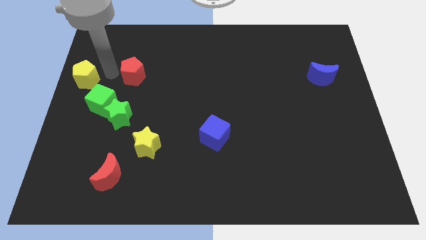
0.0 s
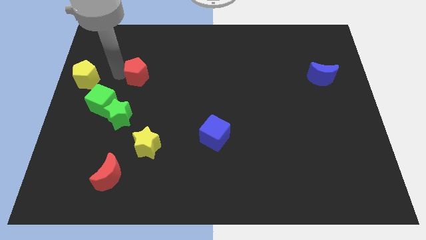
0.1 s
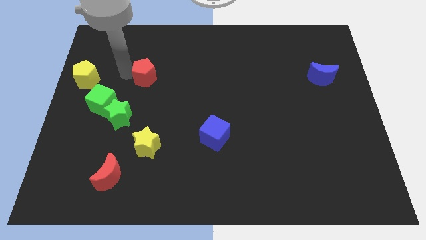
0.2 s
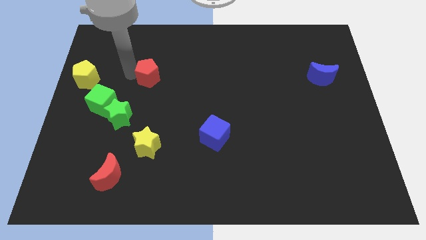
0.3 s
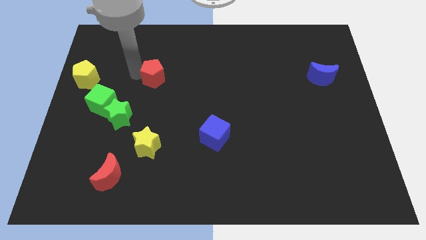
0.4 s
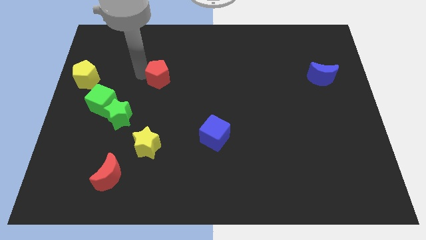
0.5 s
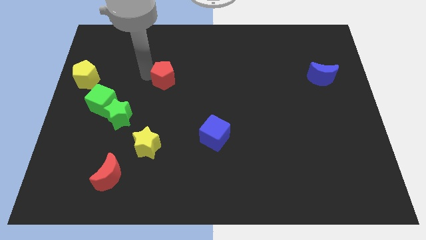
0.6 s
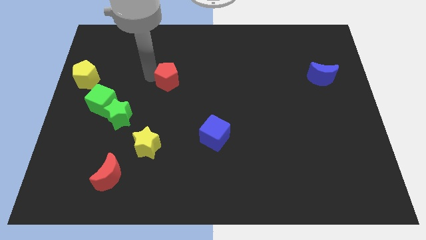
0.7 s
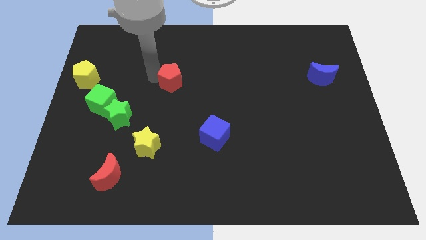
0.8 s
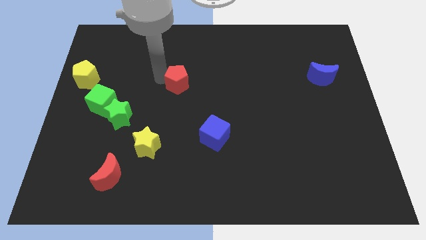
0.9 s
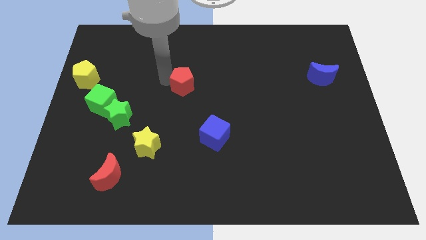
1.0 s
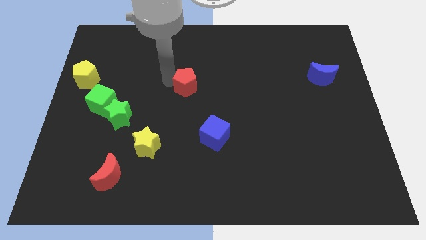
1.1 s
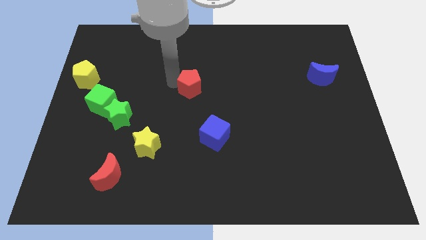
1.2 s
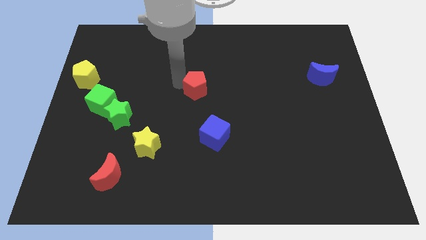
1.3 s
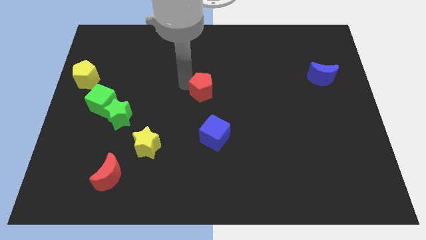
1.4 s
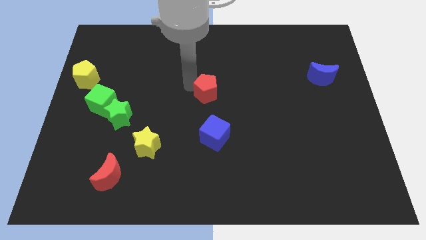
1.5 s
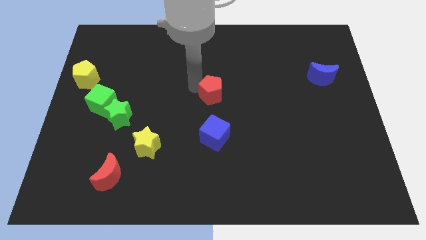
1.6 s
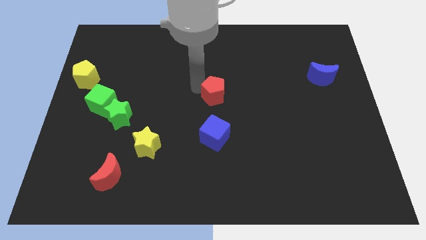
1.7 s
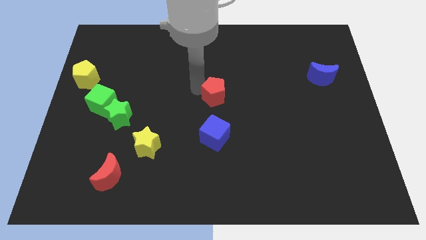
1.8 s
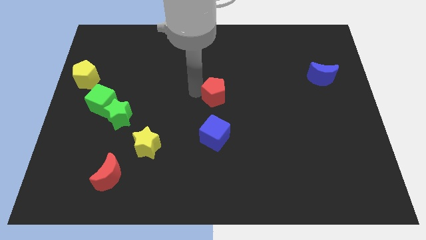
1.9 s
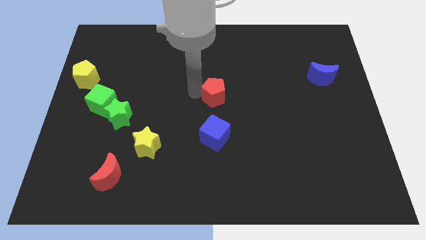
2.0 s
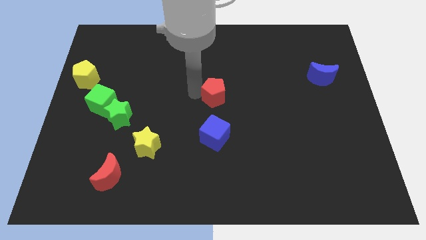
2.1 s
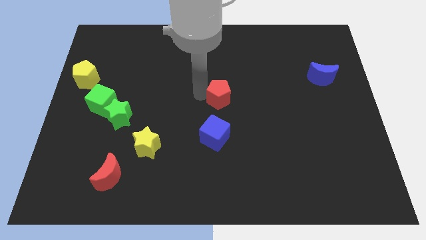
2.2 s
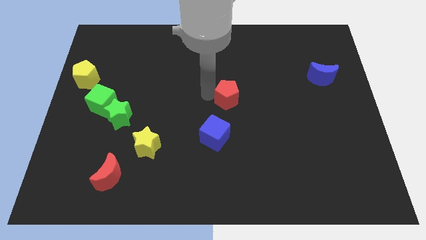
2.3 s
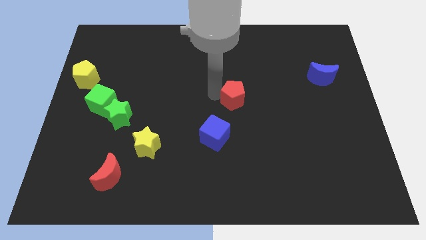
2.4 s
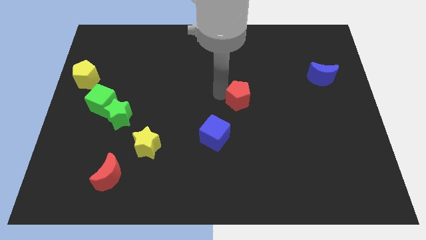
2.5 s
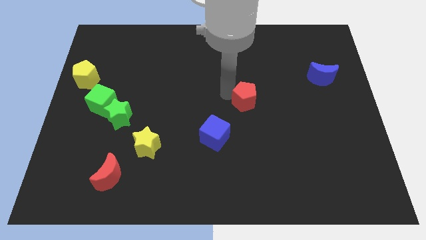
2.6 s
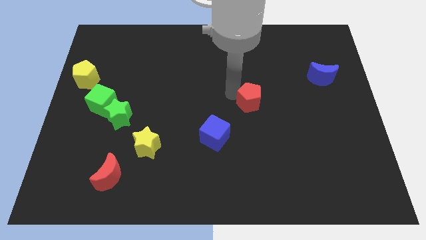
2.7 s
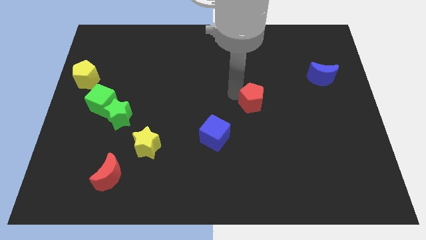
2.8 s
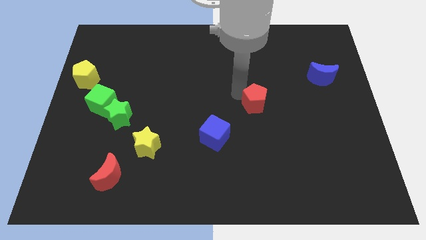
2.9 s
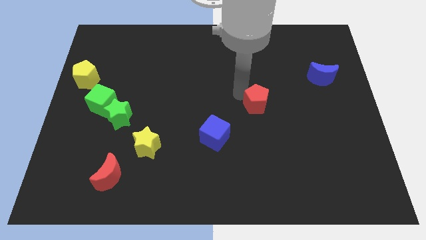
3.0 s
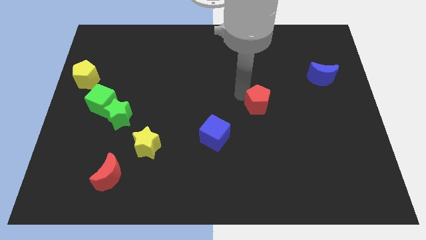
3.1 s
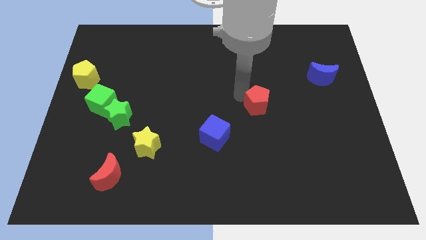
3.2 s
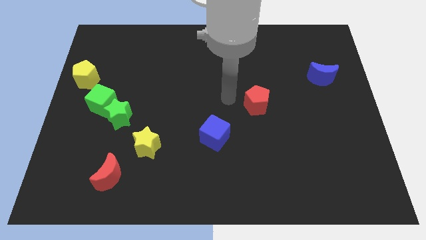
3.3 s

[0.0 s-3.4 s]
push red pentagon

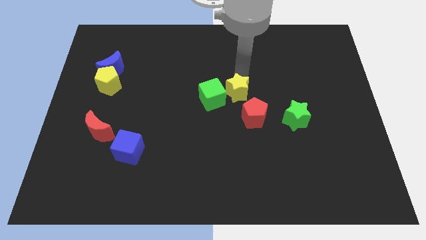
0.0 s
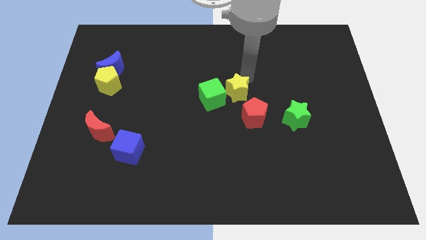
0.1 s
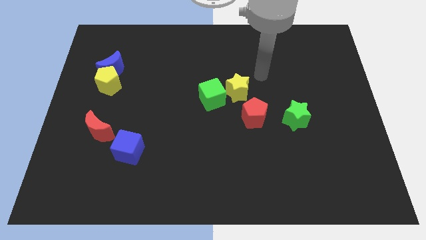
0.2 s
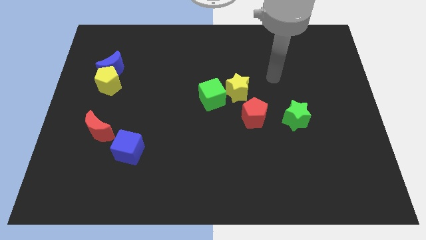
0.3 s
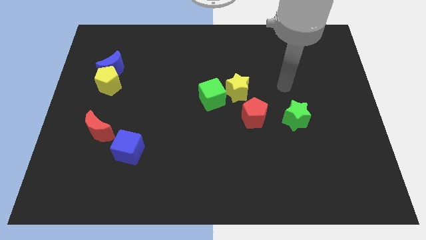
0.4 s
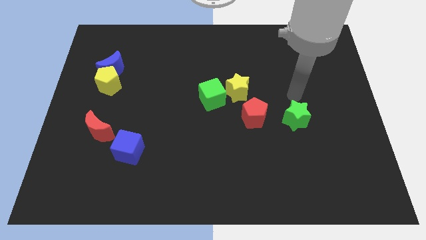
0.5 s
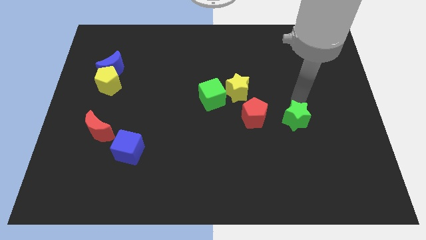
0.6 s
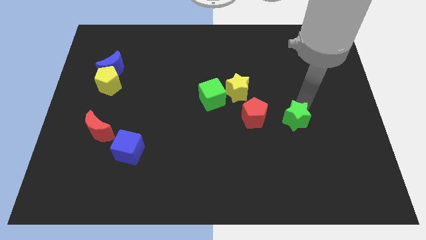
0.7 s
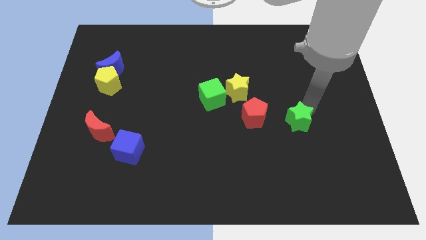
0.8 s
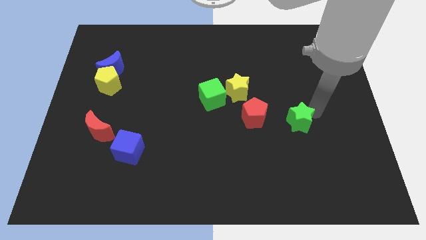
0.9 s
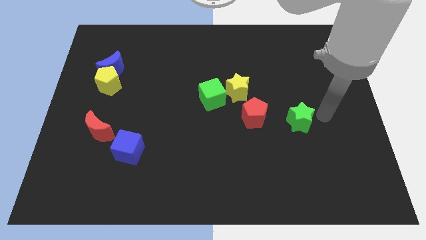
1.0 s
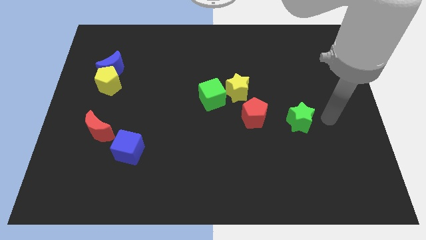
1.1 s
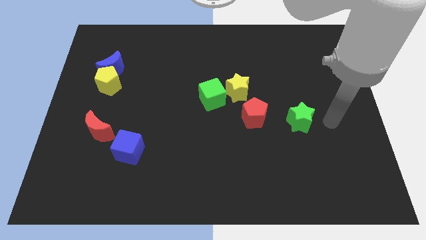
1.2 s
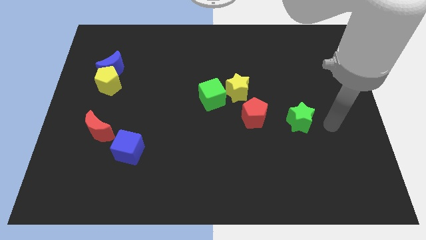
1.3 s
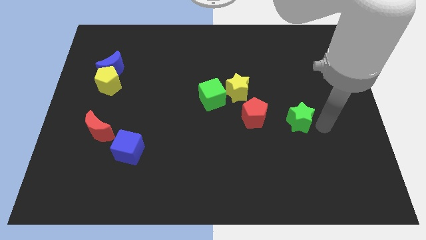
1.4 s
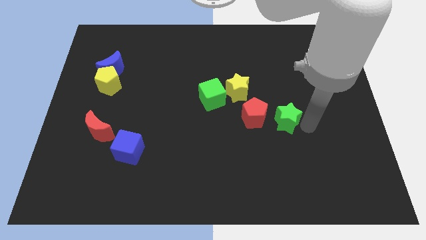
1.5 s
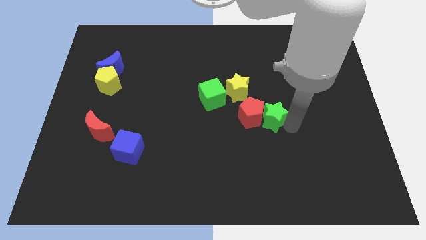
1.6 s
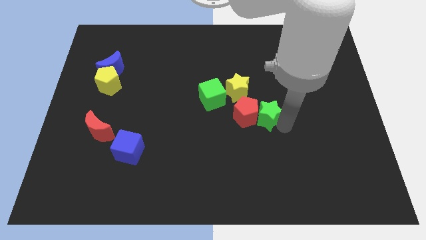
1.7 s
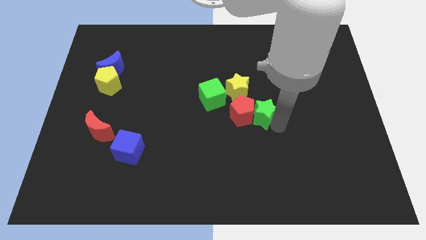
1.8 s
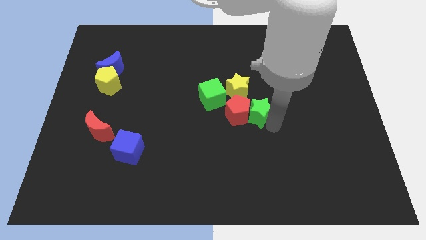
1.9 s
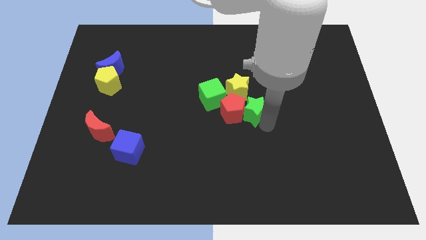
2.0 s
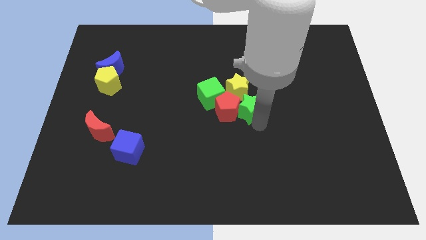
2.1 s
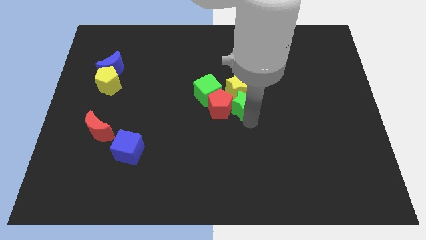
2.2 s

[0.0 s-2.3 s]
push the green star into red pentagon towards center

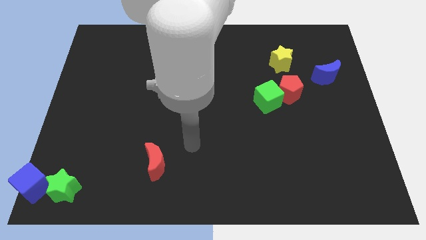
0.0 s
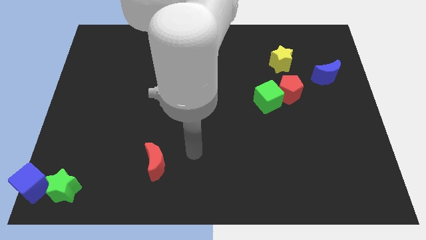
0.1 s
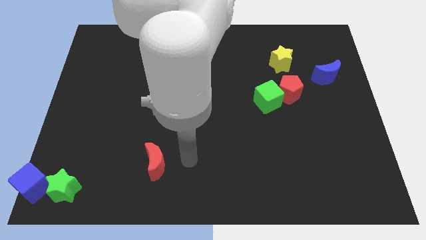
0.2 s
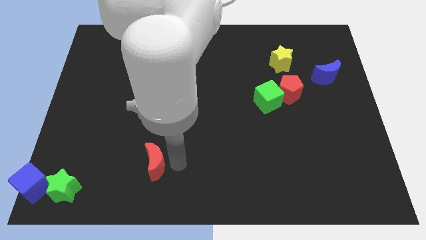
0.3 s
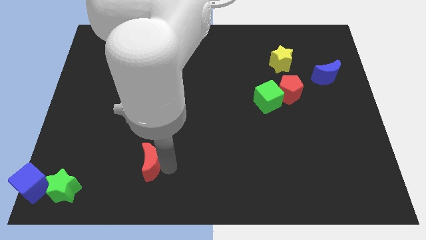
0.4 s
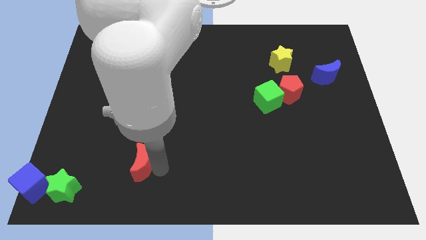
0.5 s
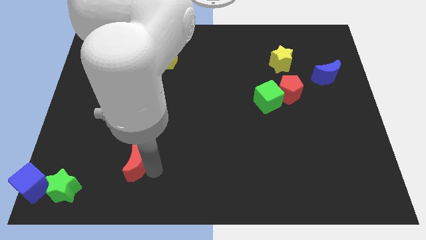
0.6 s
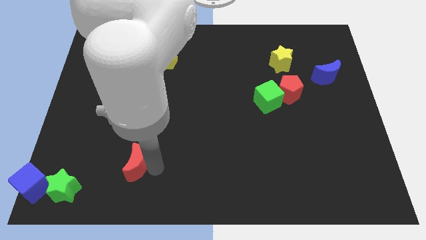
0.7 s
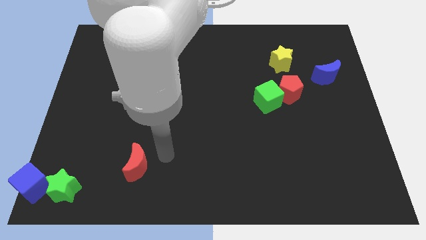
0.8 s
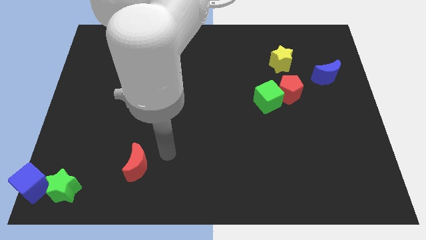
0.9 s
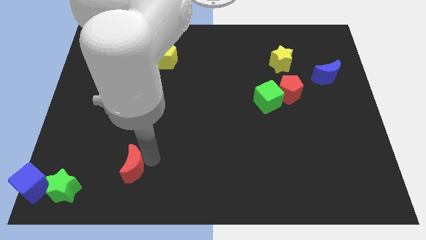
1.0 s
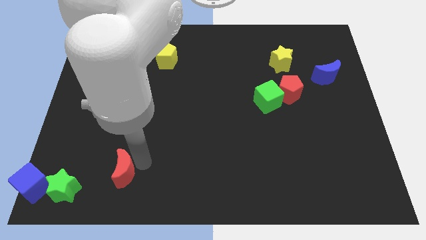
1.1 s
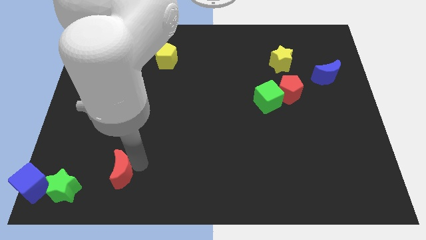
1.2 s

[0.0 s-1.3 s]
push red crescent to its left

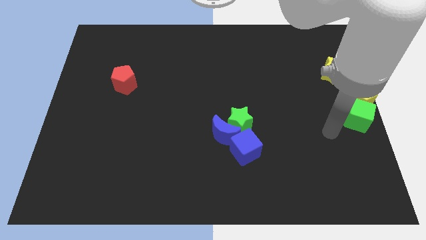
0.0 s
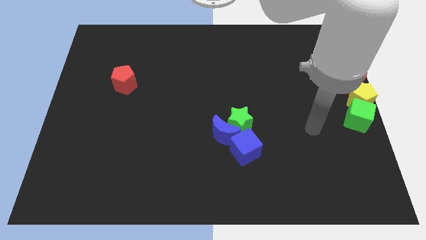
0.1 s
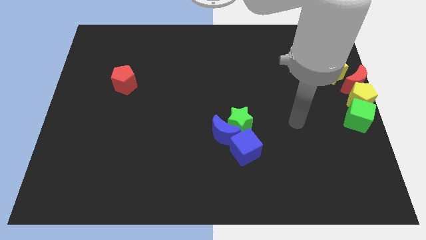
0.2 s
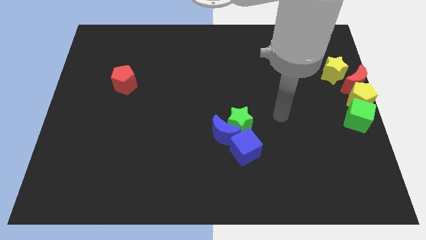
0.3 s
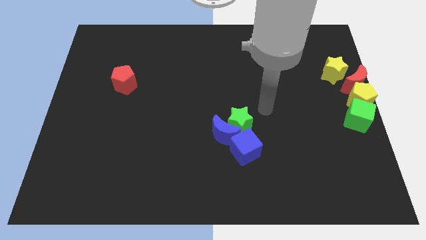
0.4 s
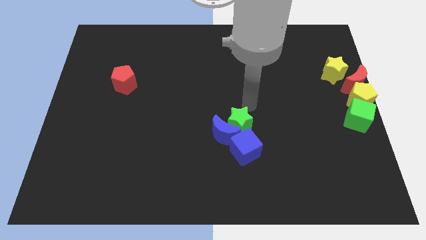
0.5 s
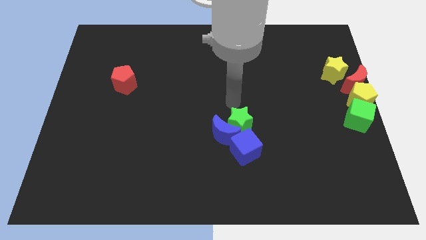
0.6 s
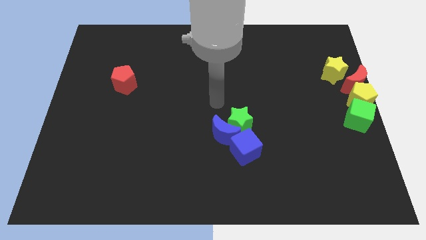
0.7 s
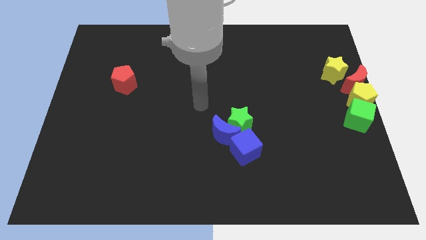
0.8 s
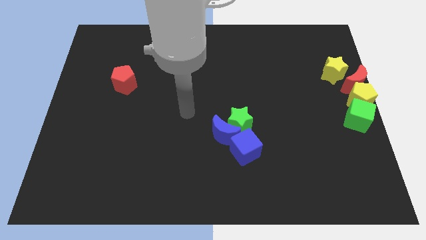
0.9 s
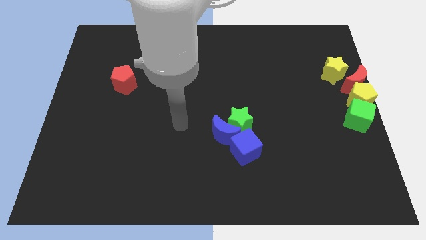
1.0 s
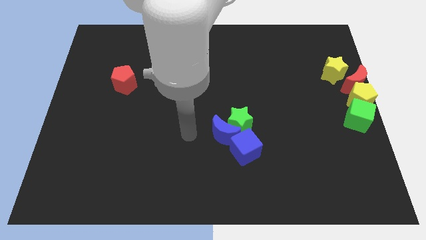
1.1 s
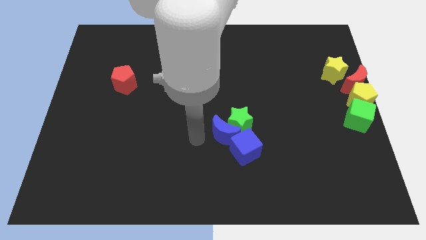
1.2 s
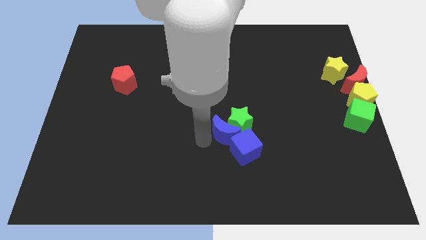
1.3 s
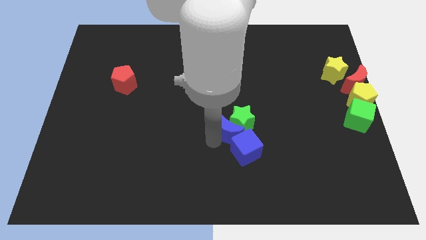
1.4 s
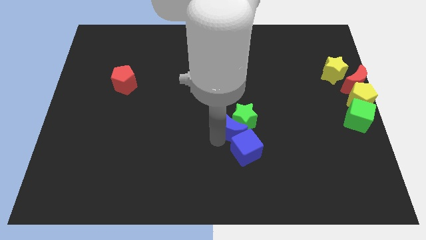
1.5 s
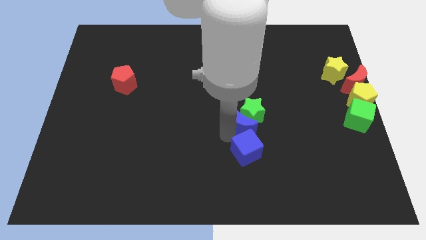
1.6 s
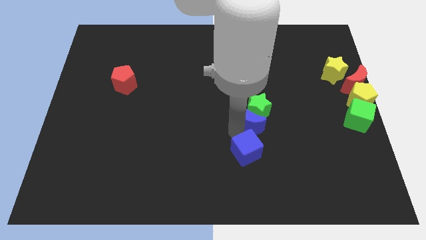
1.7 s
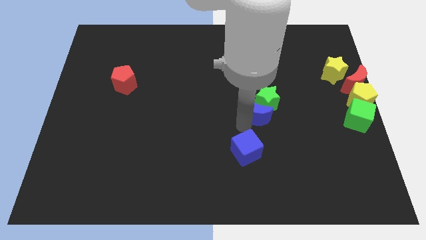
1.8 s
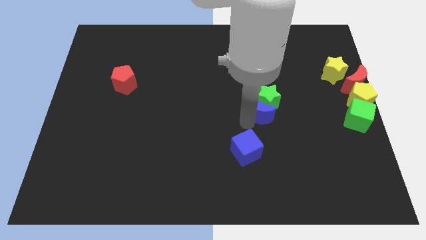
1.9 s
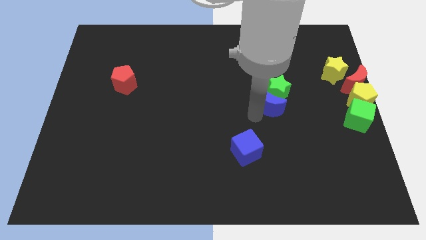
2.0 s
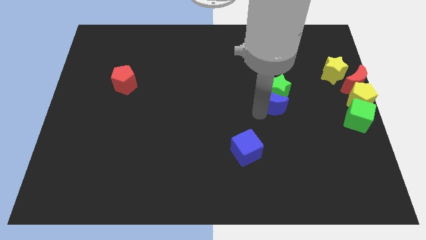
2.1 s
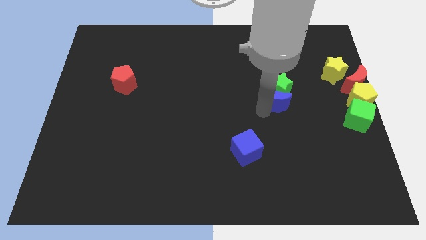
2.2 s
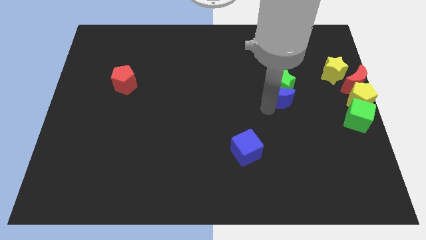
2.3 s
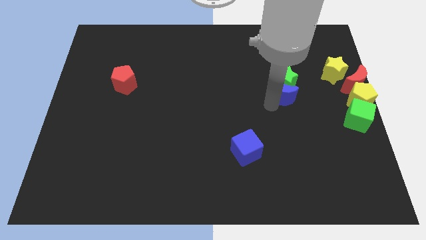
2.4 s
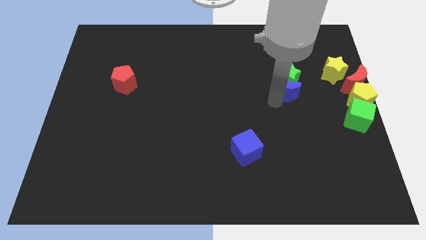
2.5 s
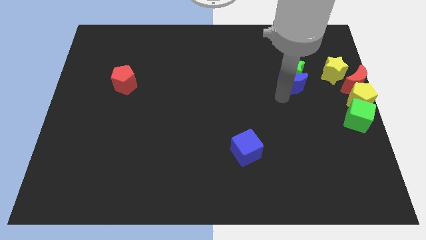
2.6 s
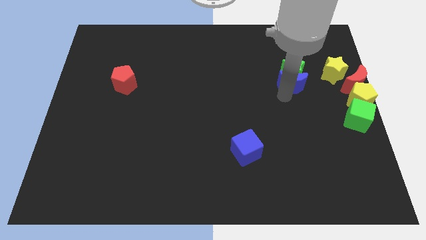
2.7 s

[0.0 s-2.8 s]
place green star to the left of yellow star
